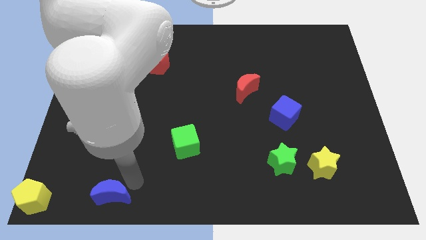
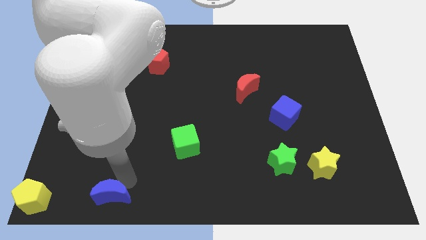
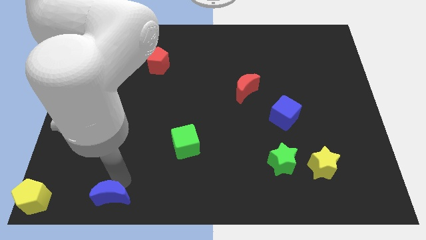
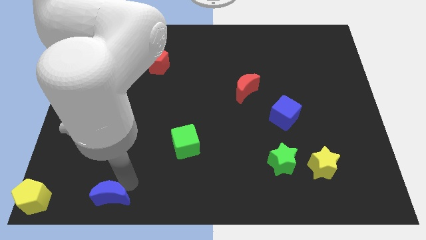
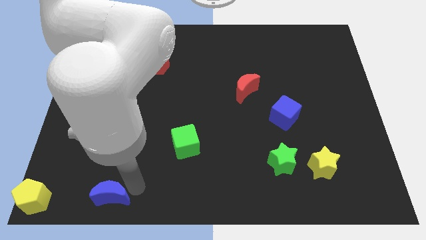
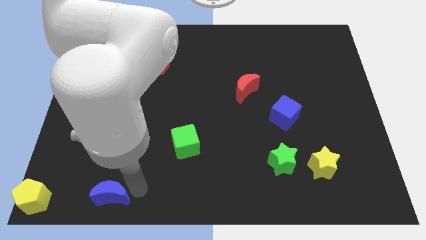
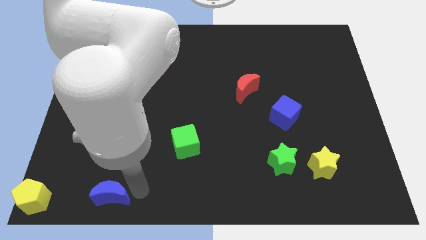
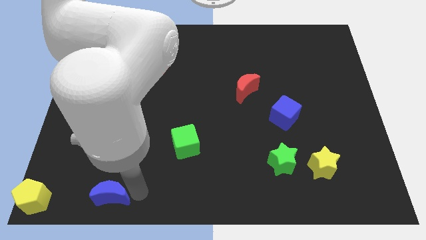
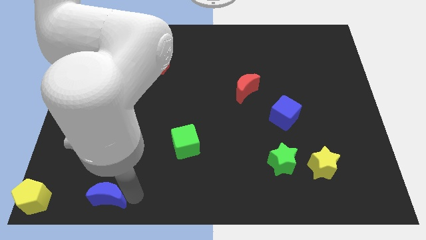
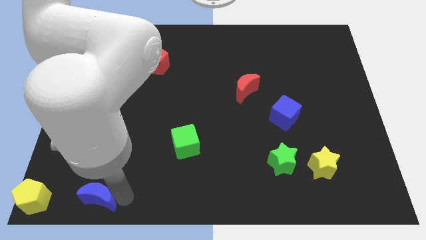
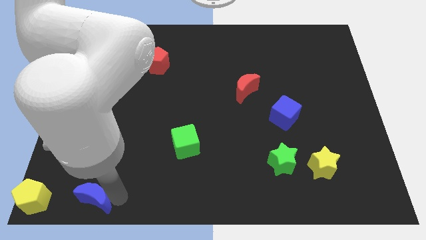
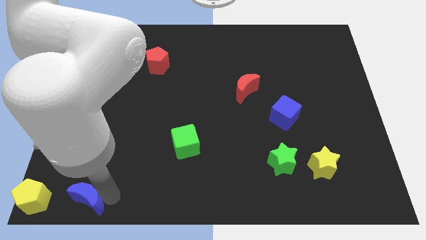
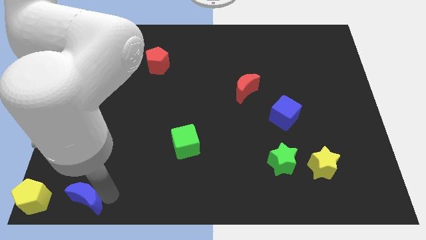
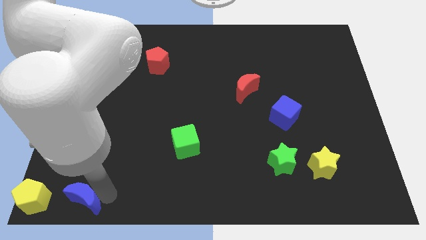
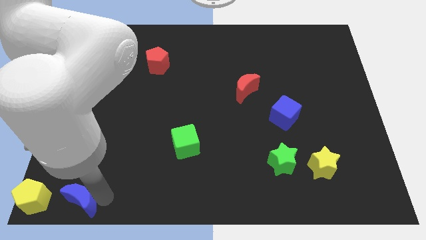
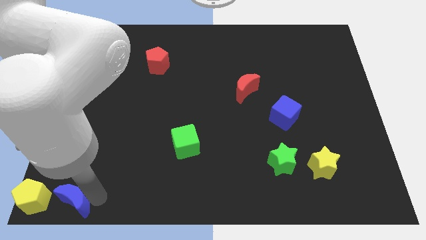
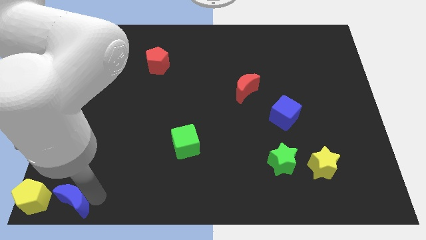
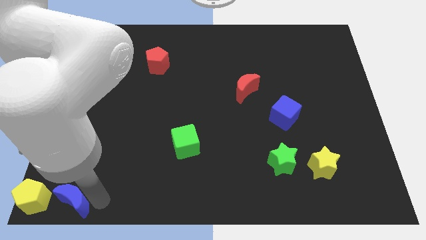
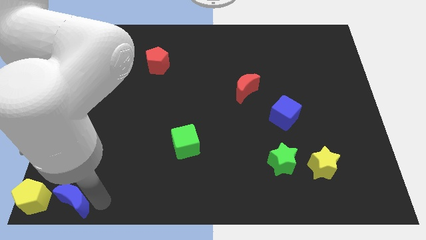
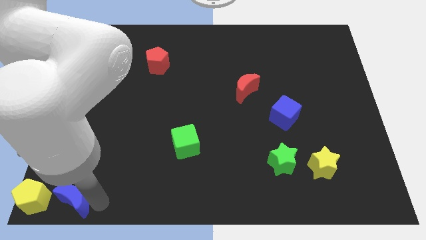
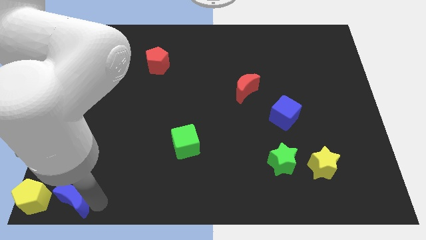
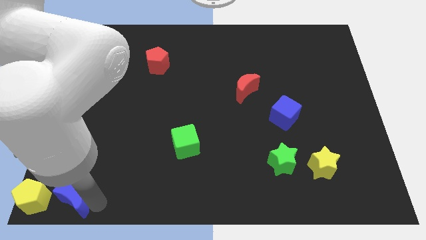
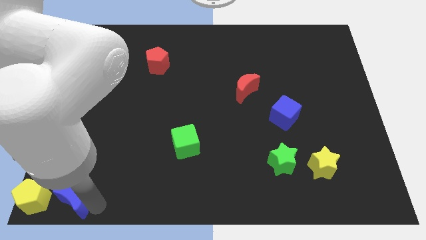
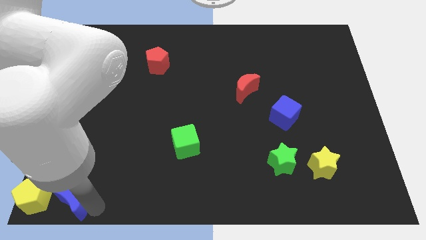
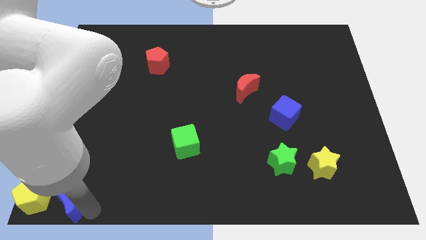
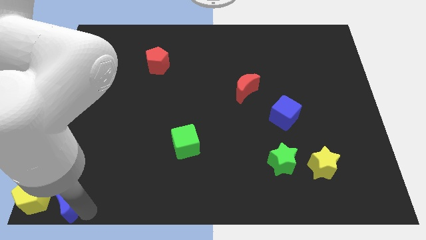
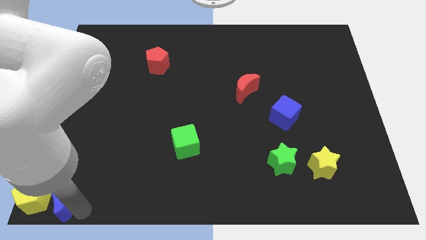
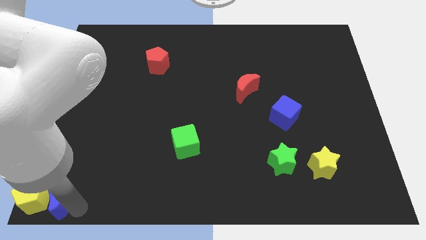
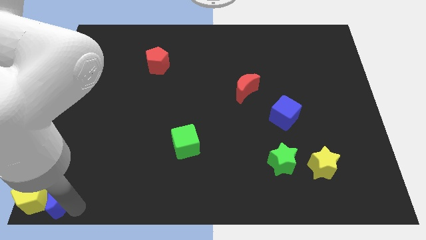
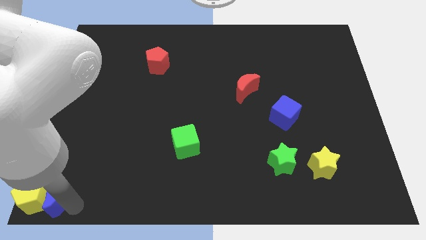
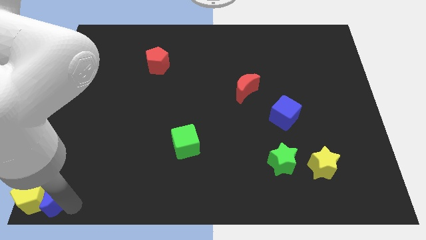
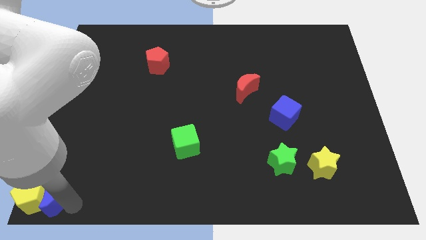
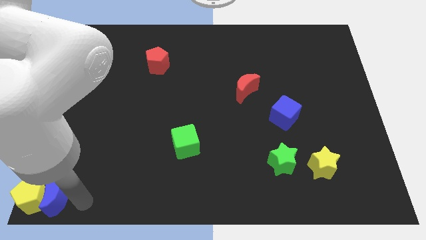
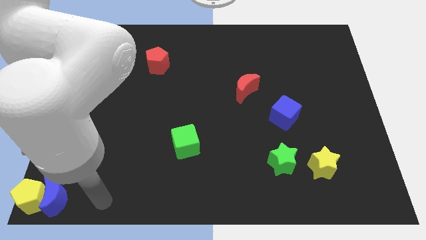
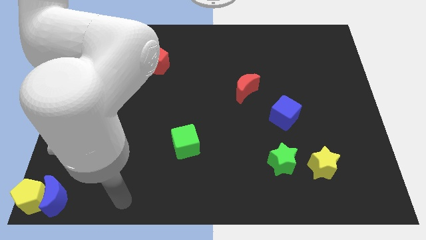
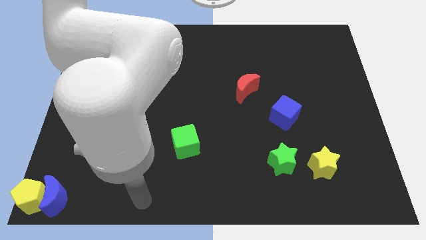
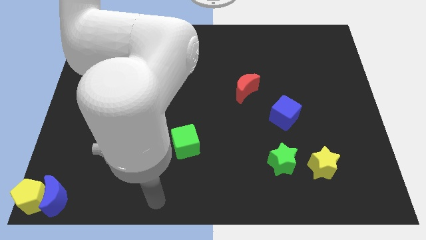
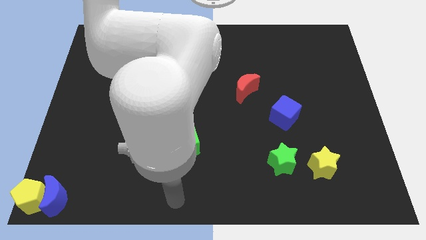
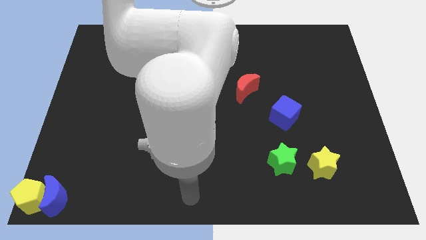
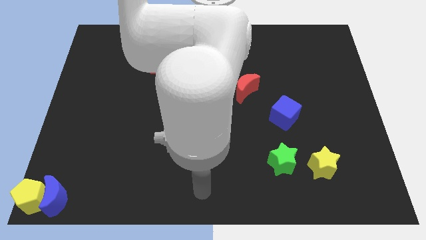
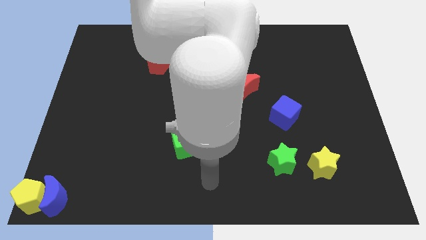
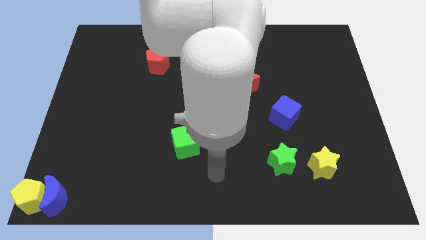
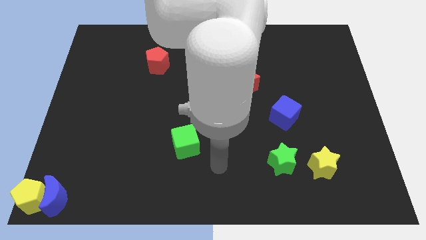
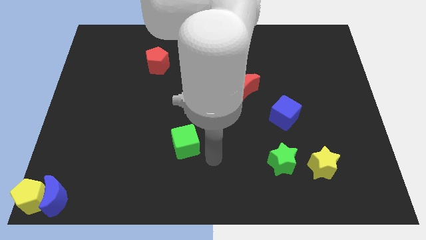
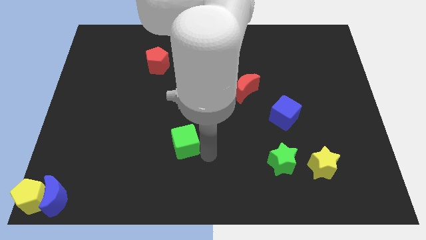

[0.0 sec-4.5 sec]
move blue moon close to the yellow pentagon

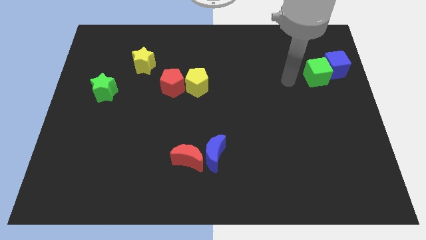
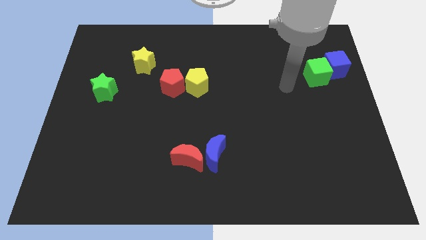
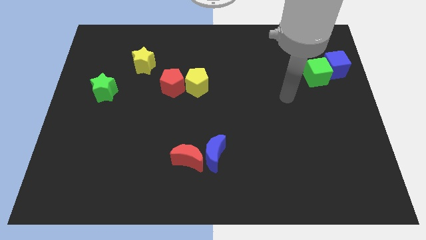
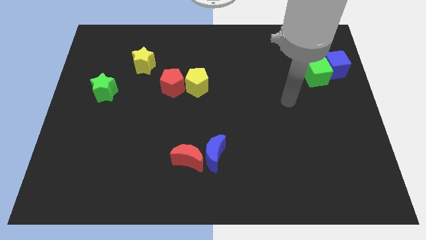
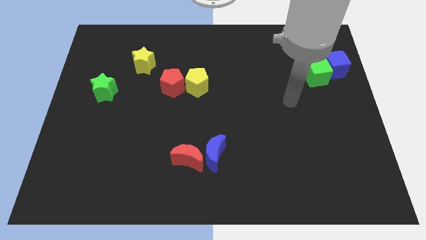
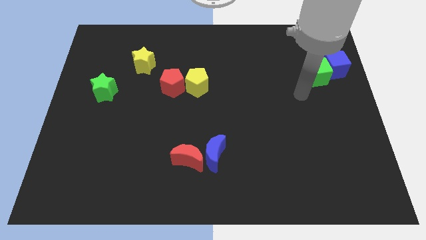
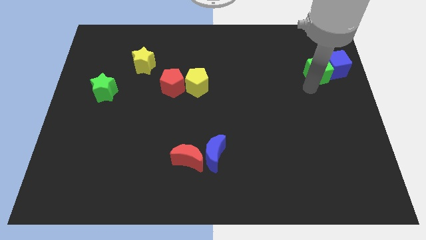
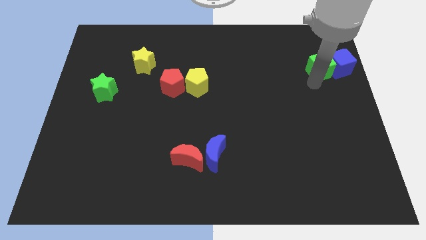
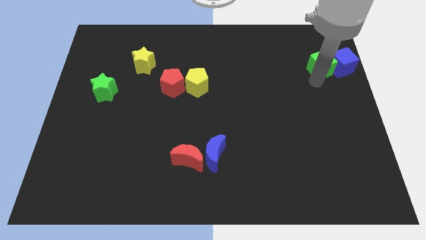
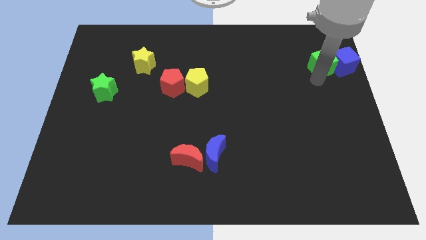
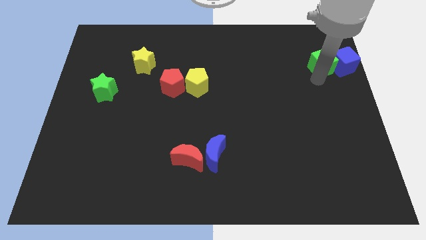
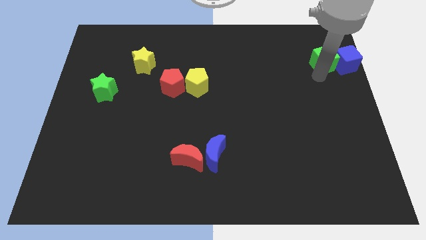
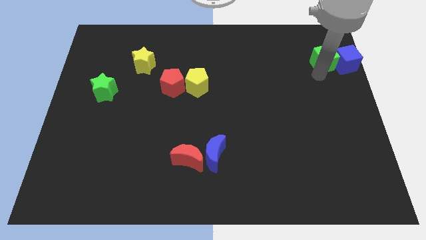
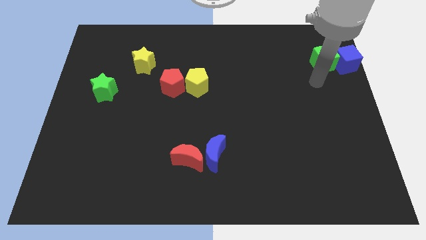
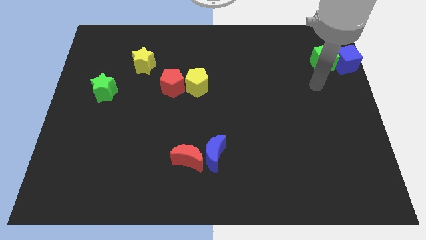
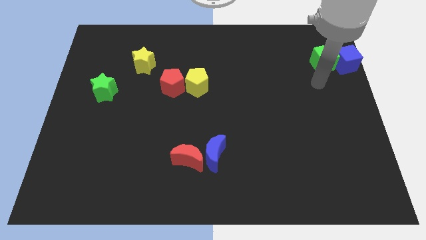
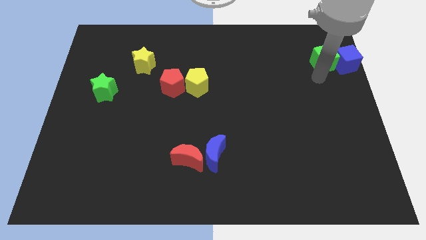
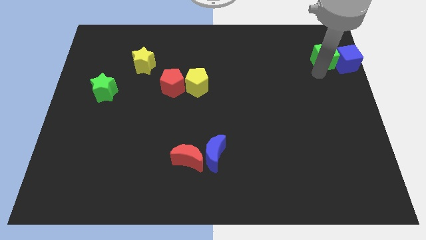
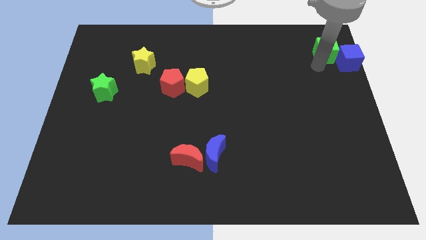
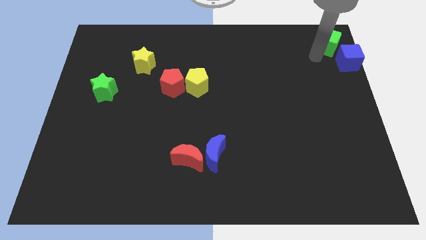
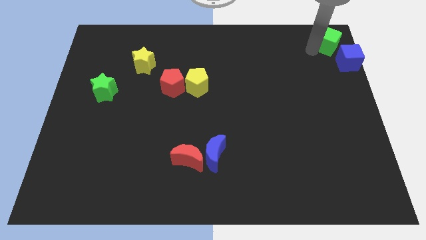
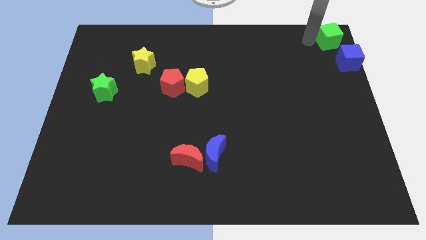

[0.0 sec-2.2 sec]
separate the green cube away from the blue cube

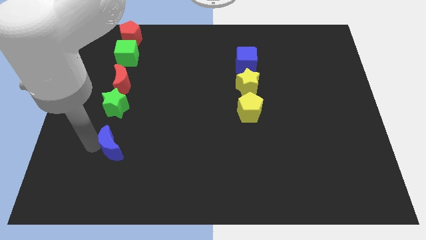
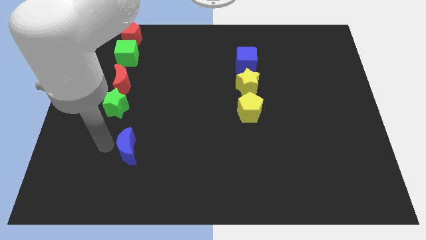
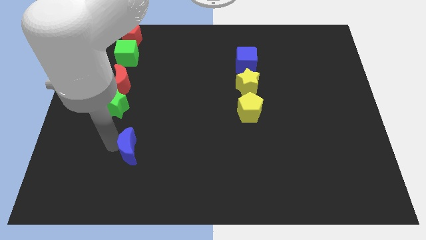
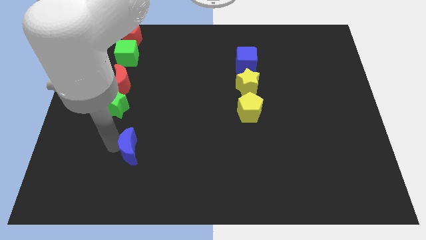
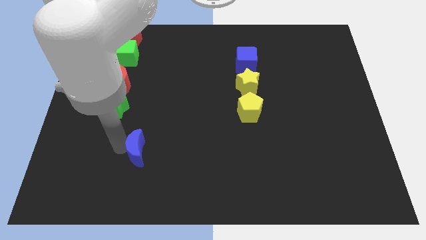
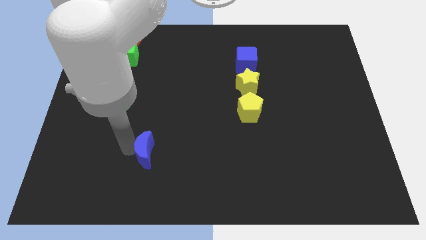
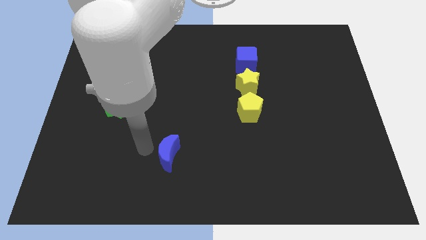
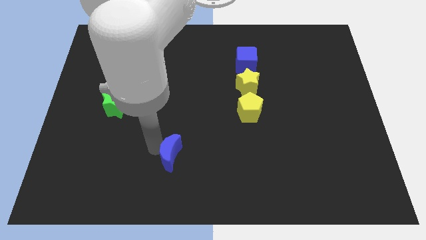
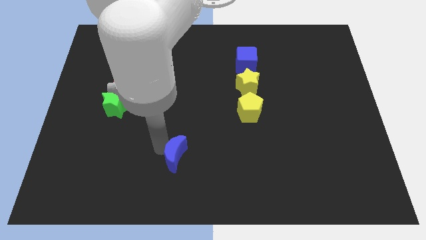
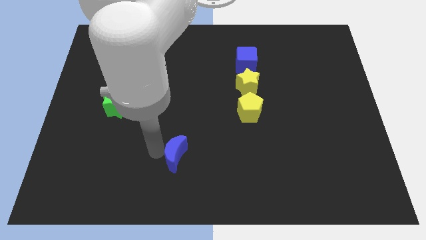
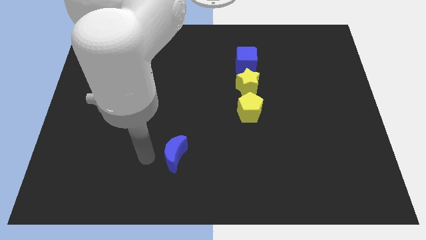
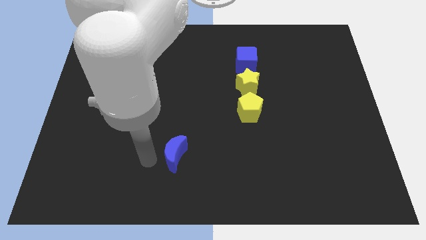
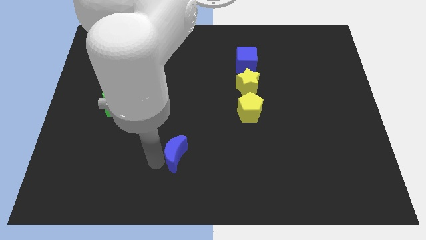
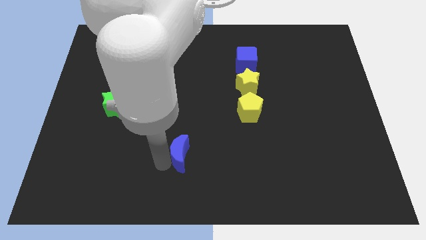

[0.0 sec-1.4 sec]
move the blue cube below between all the cubes

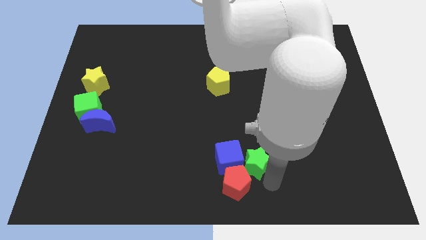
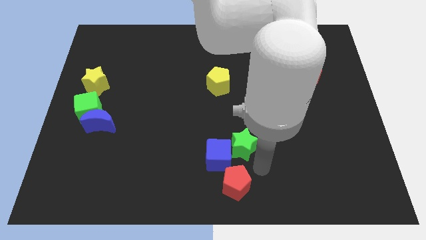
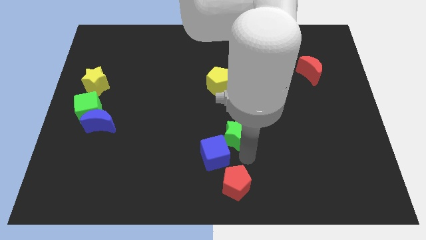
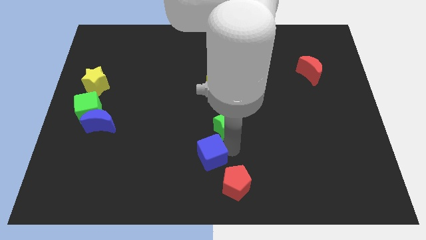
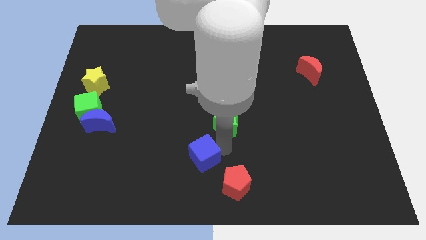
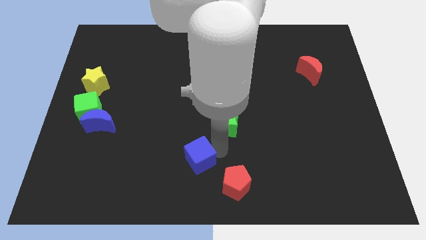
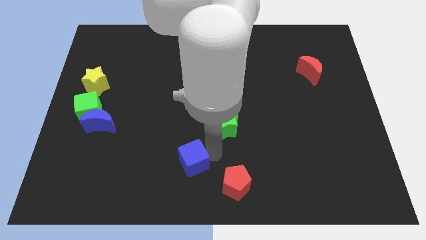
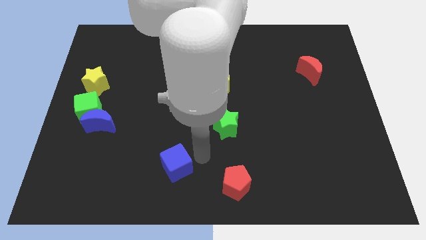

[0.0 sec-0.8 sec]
push the blue cube away from the green star

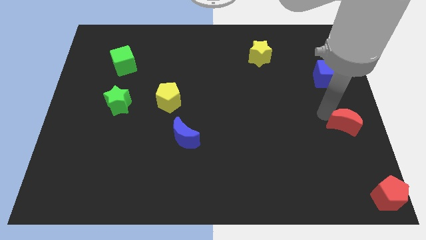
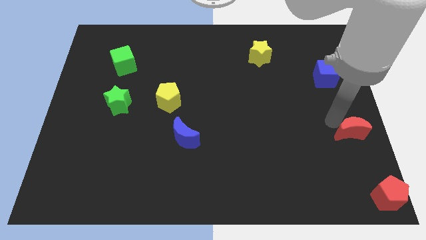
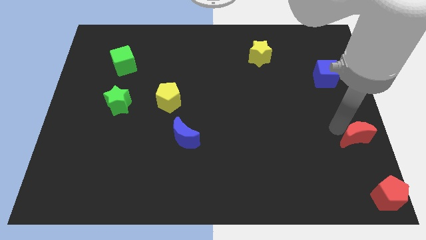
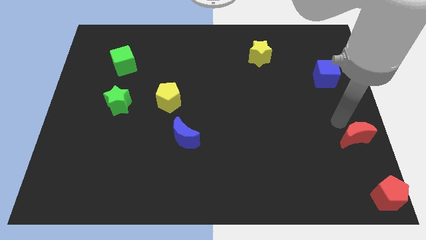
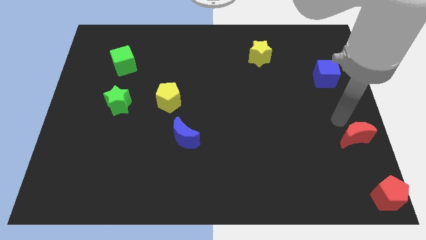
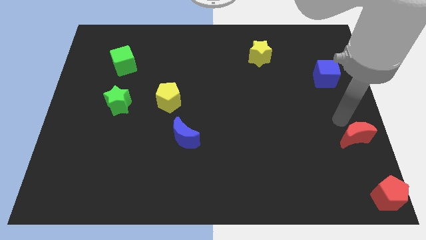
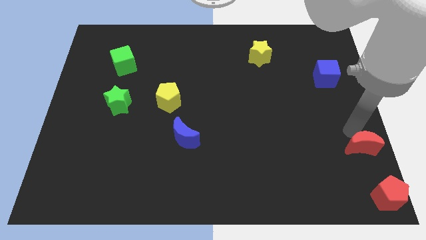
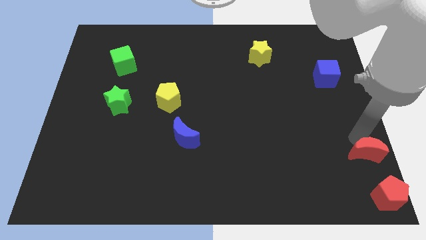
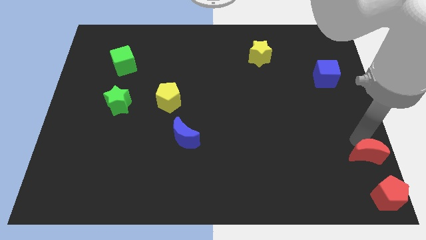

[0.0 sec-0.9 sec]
move the red crescent above the red pentagon
